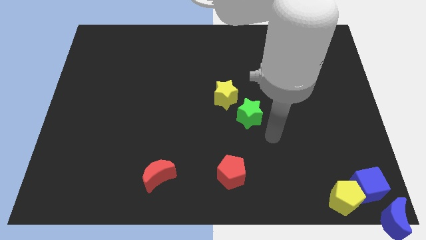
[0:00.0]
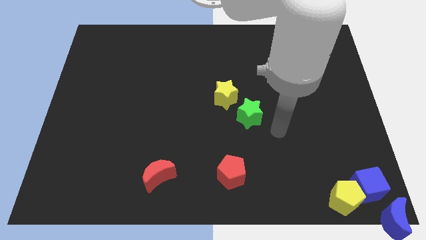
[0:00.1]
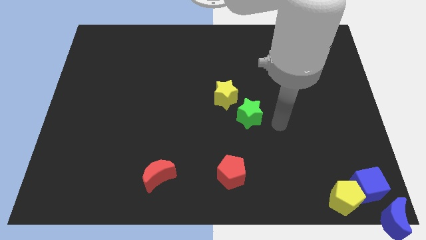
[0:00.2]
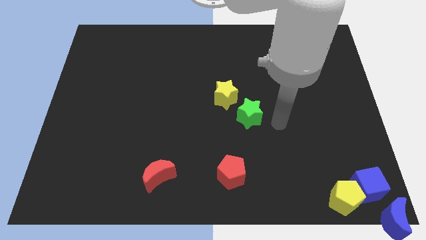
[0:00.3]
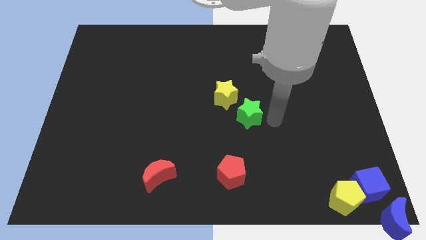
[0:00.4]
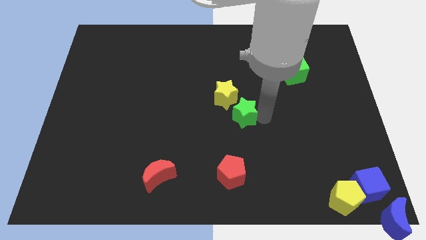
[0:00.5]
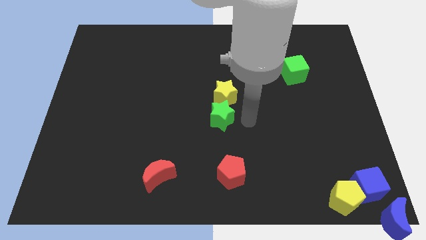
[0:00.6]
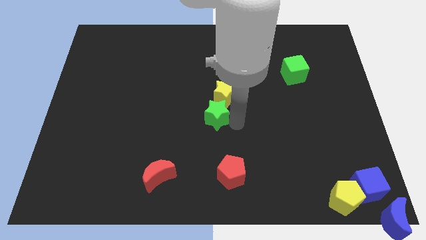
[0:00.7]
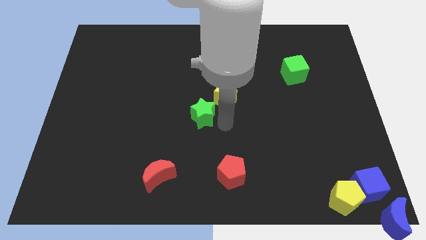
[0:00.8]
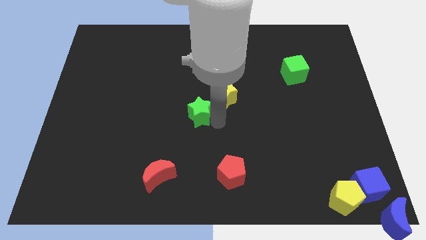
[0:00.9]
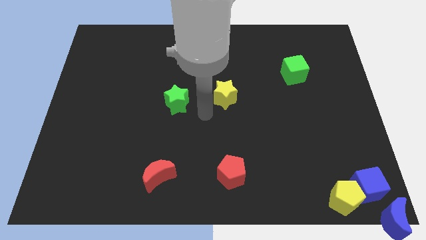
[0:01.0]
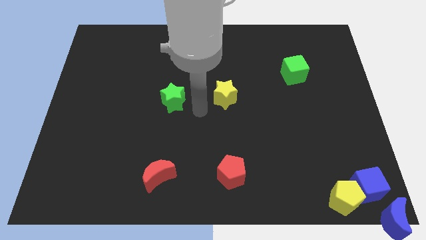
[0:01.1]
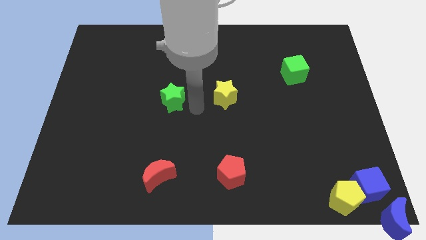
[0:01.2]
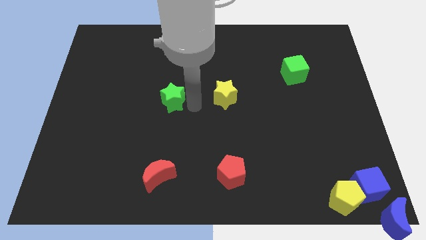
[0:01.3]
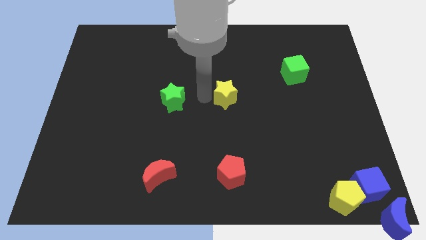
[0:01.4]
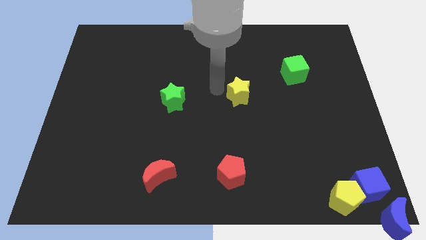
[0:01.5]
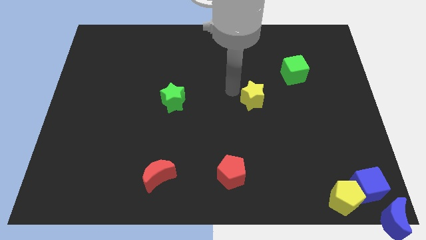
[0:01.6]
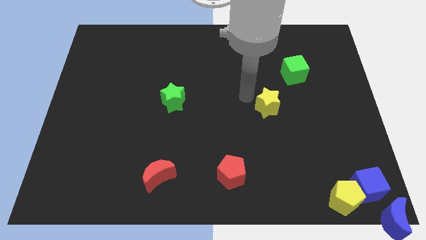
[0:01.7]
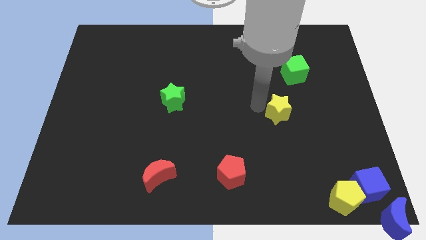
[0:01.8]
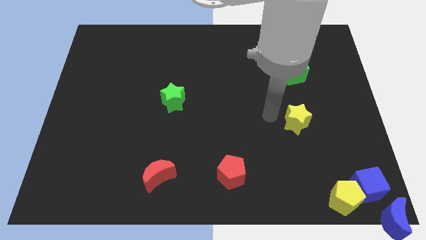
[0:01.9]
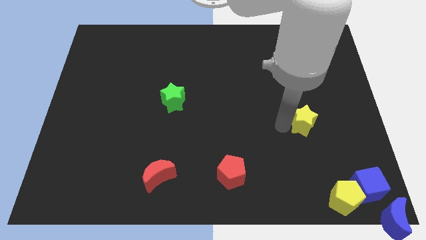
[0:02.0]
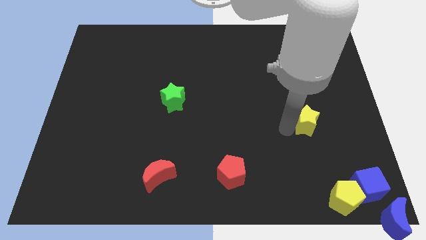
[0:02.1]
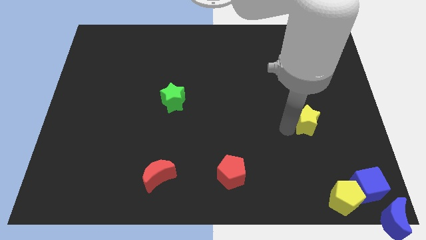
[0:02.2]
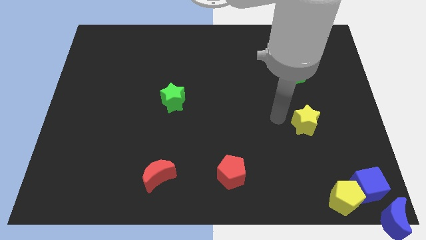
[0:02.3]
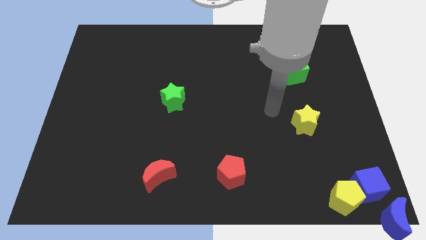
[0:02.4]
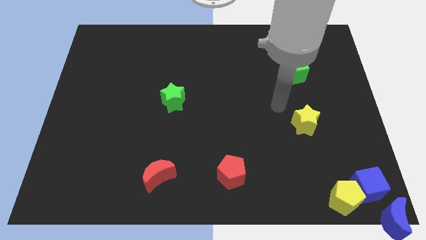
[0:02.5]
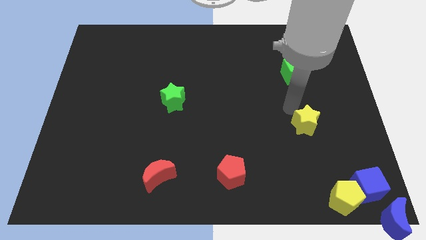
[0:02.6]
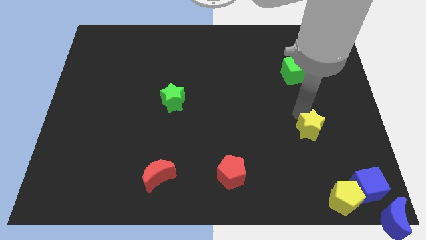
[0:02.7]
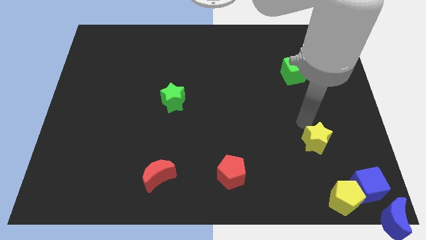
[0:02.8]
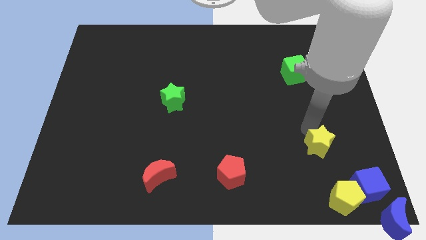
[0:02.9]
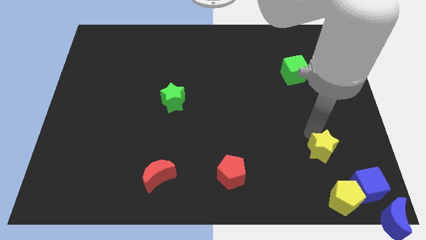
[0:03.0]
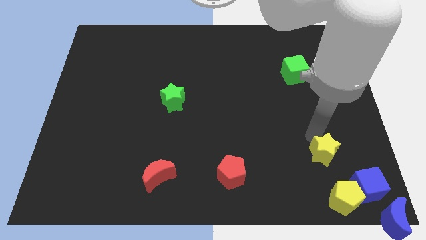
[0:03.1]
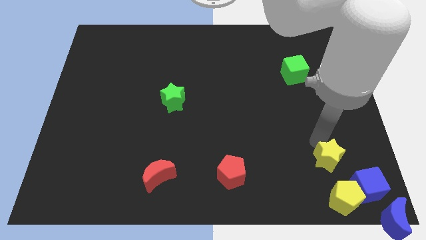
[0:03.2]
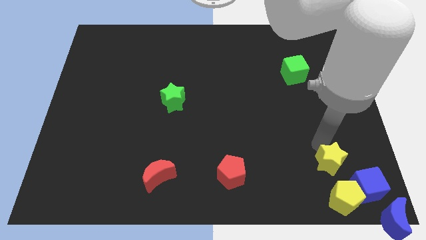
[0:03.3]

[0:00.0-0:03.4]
separate the green star and yellow star

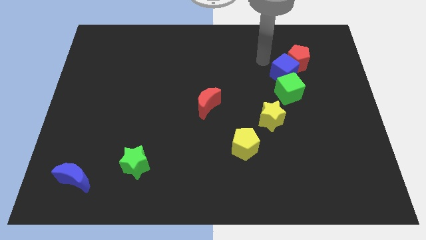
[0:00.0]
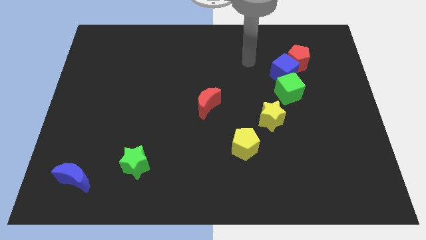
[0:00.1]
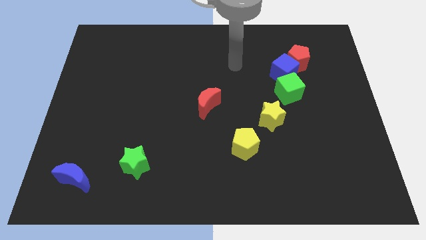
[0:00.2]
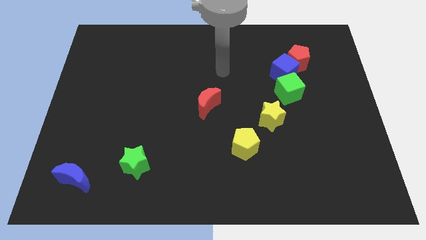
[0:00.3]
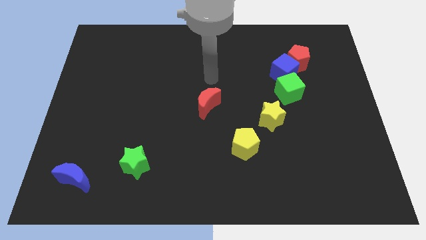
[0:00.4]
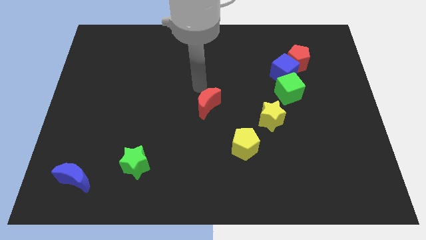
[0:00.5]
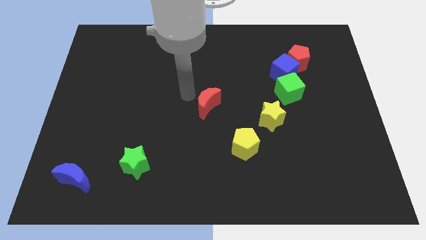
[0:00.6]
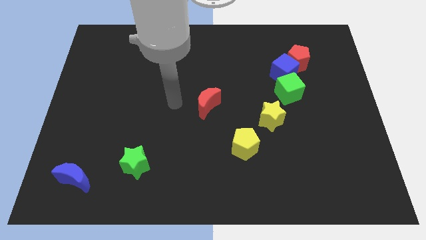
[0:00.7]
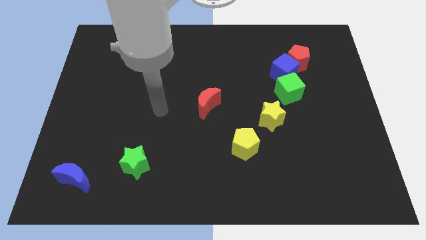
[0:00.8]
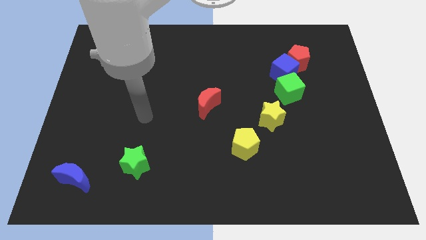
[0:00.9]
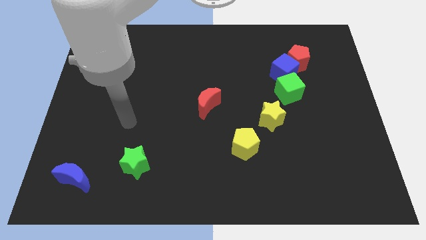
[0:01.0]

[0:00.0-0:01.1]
put your arm on the top of the green star

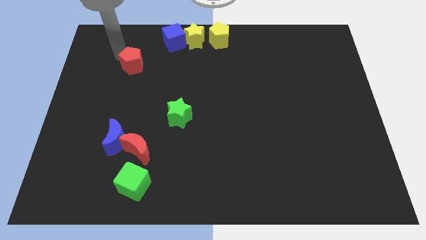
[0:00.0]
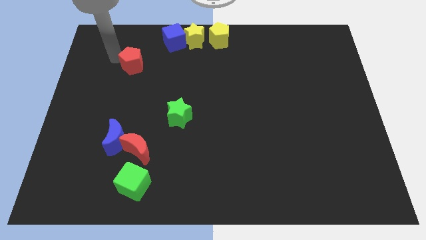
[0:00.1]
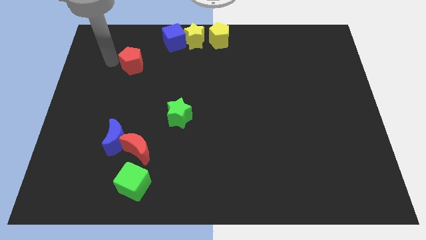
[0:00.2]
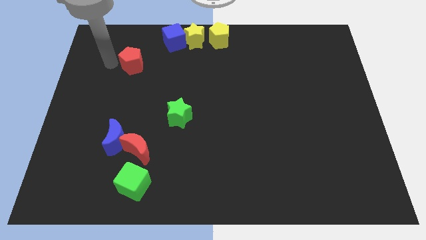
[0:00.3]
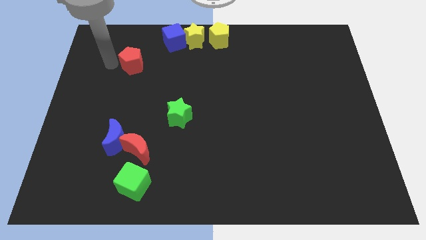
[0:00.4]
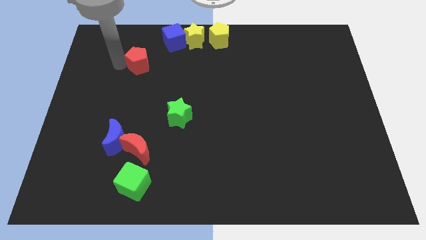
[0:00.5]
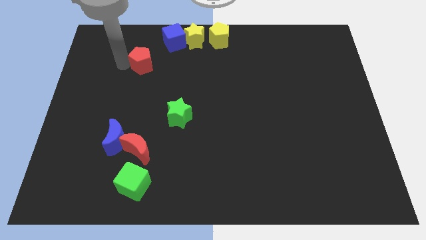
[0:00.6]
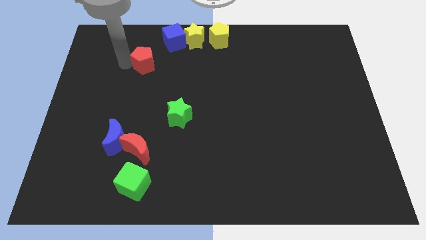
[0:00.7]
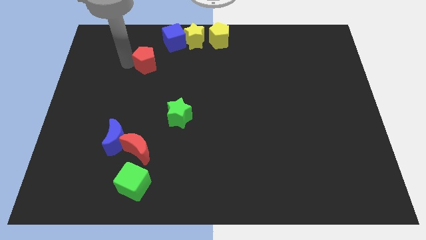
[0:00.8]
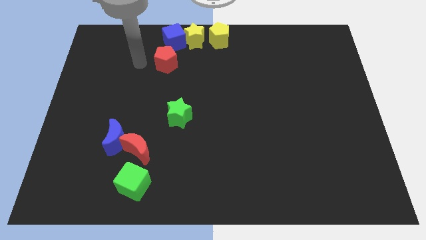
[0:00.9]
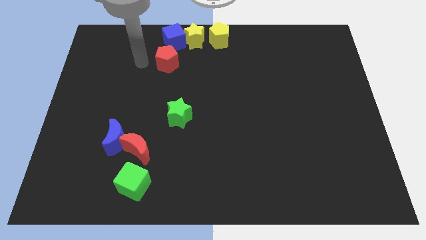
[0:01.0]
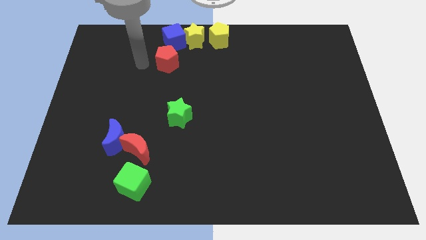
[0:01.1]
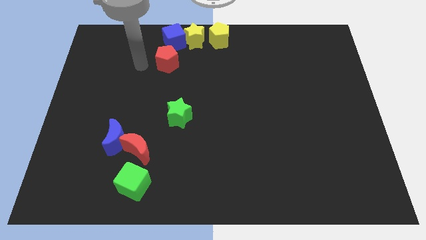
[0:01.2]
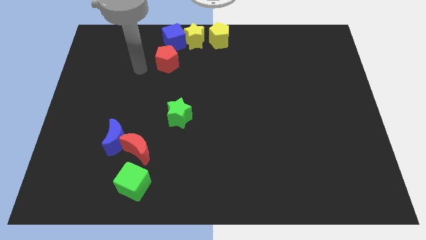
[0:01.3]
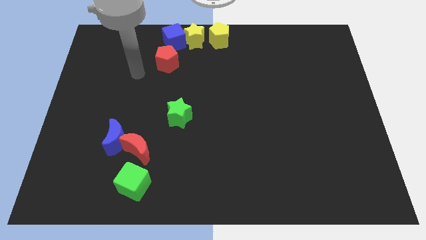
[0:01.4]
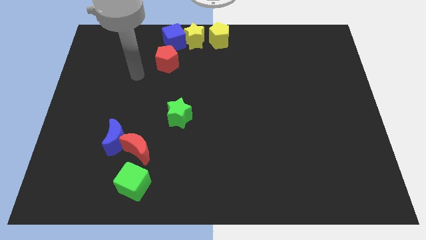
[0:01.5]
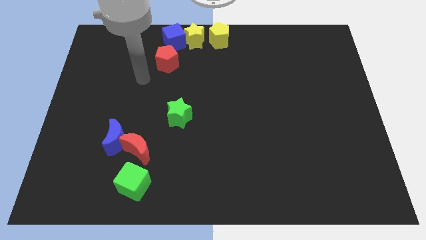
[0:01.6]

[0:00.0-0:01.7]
put the red pentagon below the blue cube

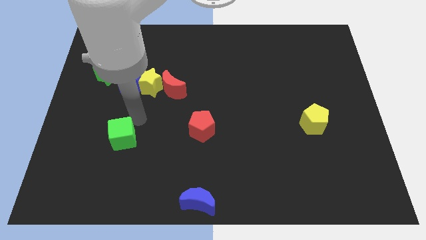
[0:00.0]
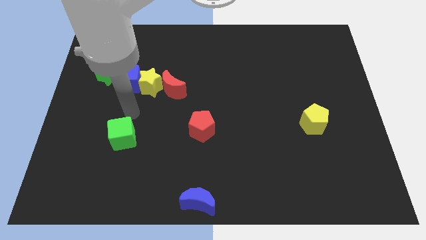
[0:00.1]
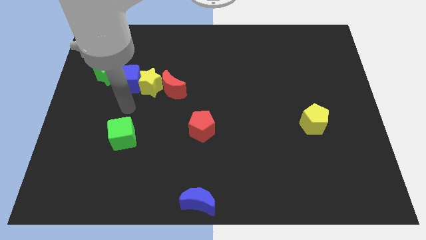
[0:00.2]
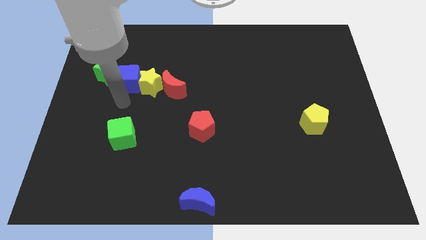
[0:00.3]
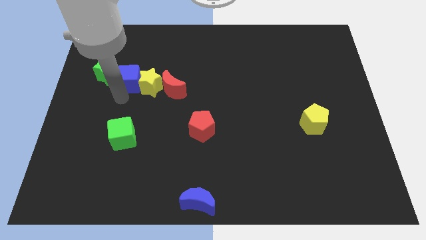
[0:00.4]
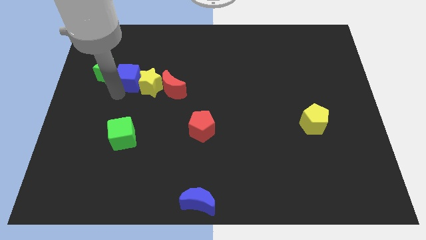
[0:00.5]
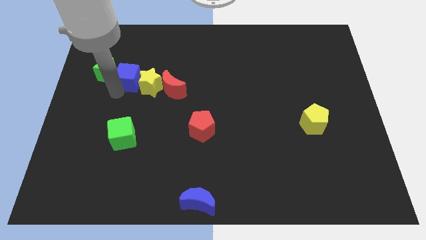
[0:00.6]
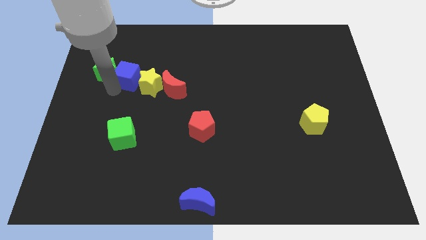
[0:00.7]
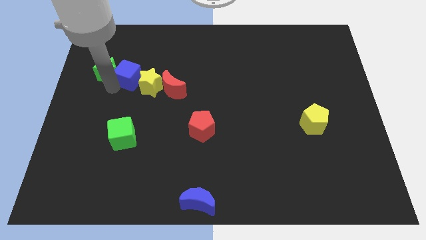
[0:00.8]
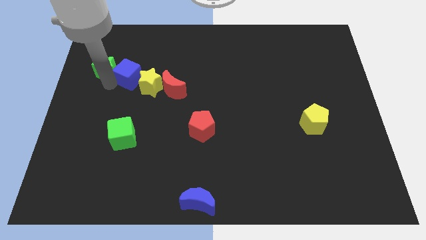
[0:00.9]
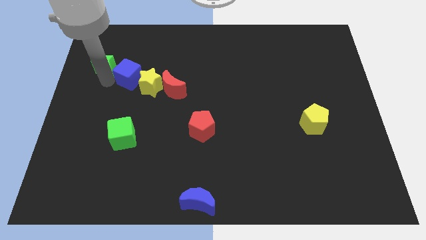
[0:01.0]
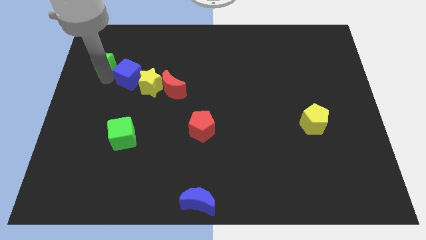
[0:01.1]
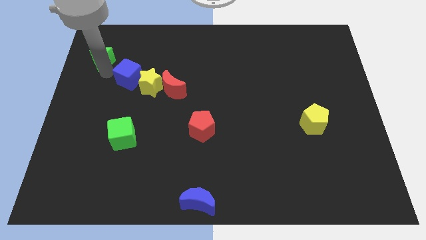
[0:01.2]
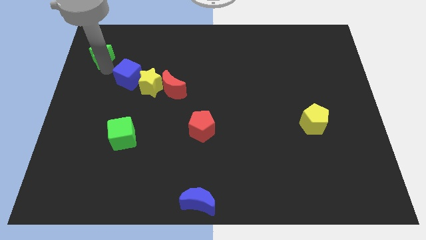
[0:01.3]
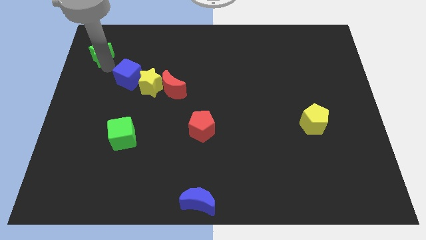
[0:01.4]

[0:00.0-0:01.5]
slightly touch the blue cube and green star

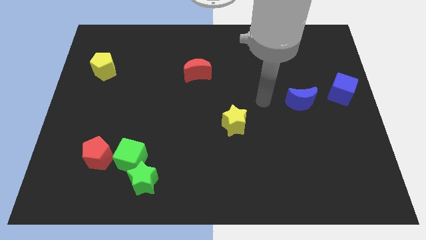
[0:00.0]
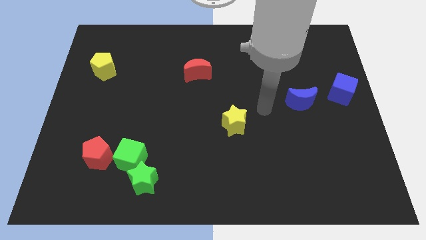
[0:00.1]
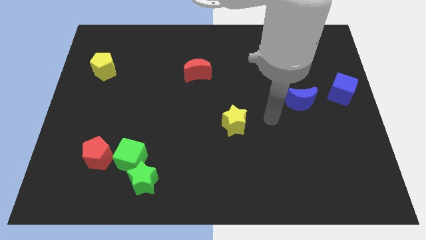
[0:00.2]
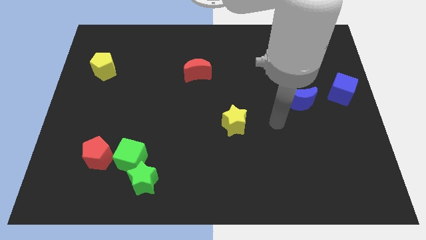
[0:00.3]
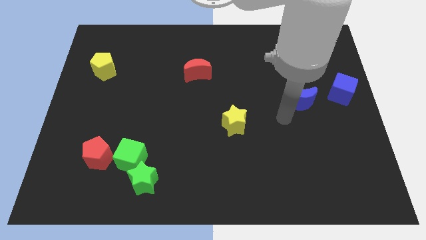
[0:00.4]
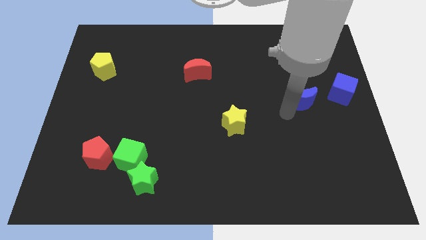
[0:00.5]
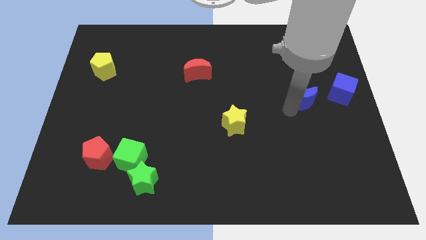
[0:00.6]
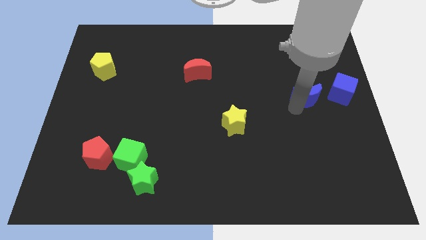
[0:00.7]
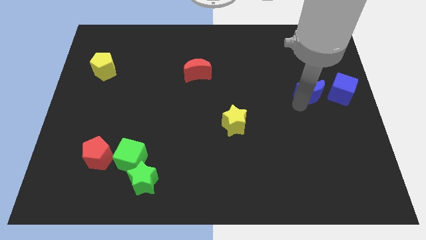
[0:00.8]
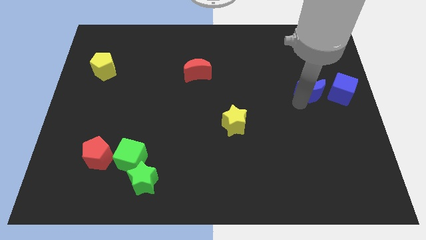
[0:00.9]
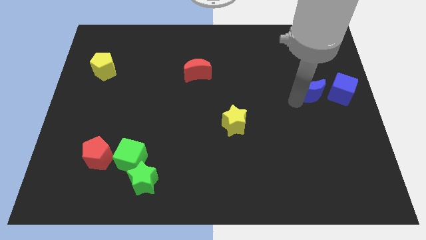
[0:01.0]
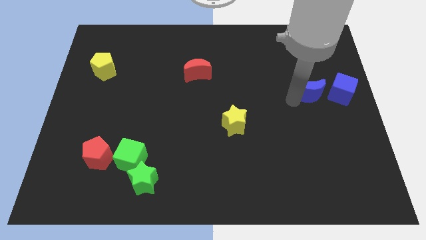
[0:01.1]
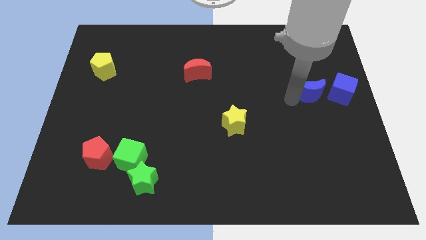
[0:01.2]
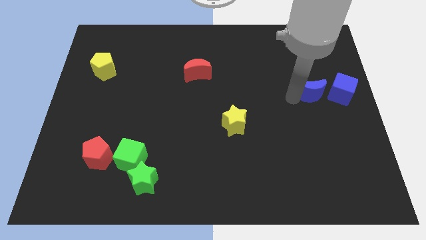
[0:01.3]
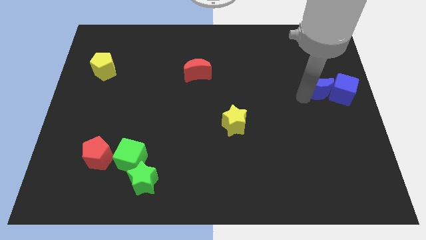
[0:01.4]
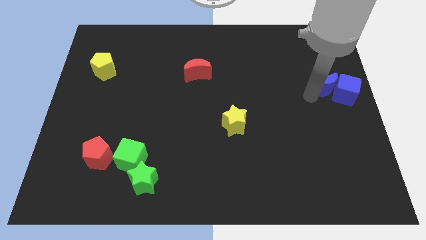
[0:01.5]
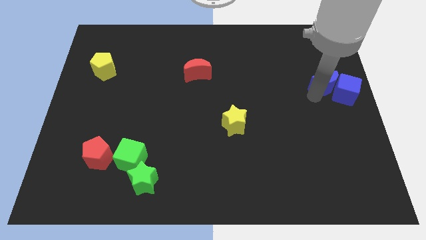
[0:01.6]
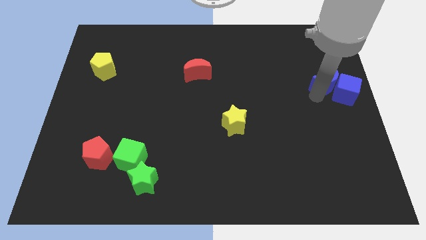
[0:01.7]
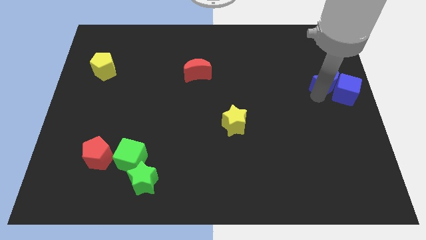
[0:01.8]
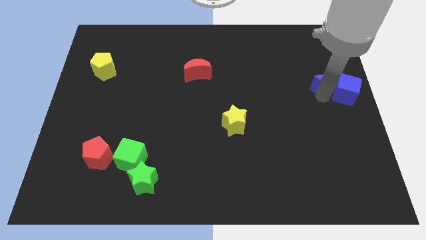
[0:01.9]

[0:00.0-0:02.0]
move the blue crescent into the blue cube to the left
